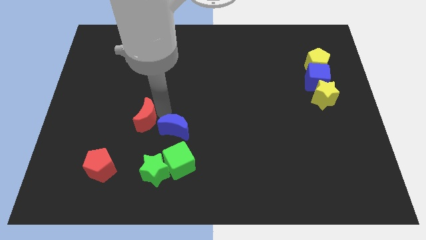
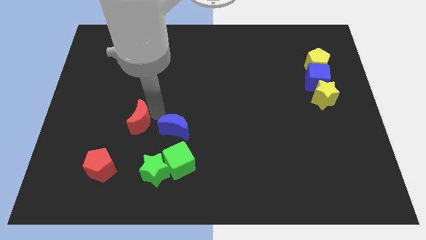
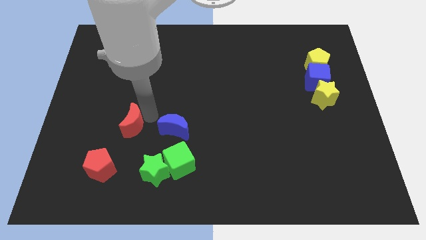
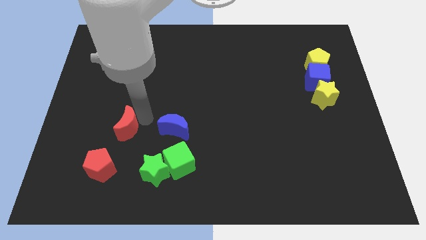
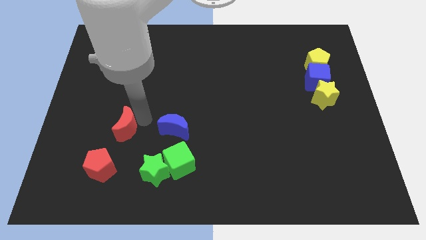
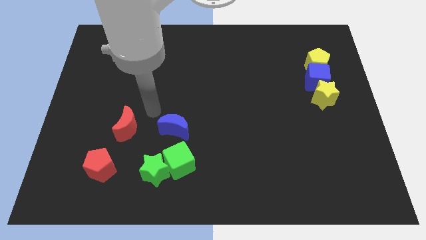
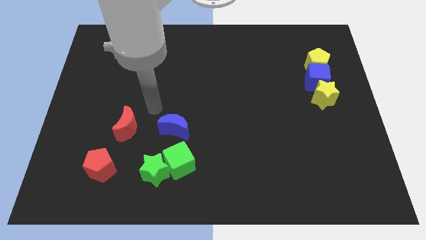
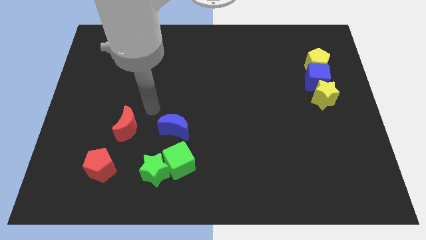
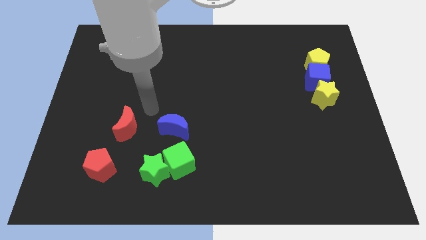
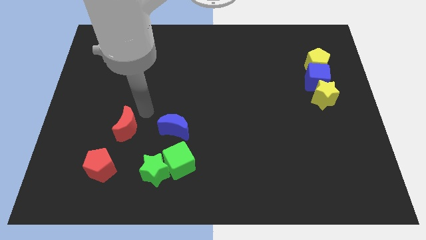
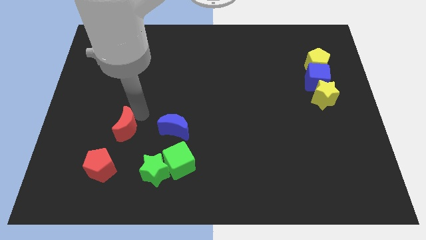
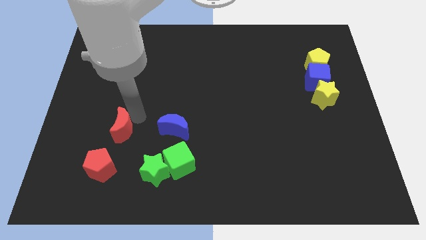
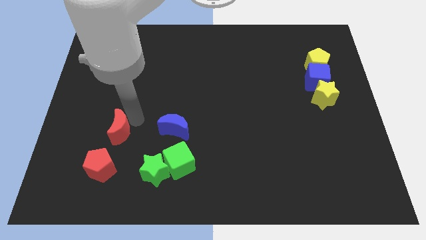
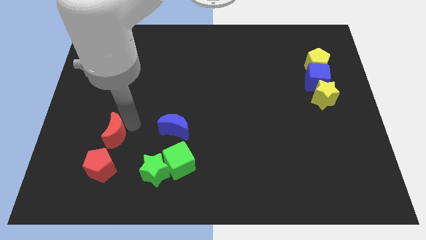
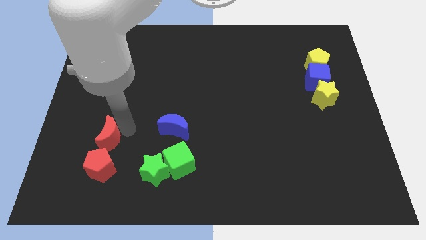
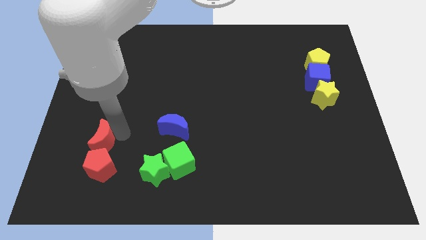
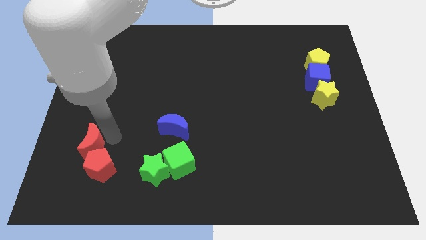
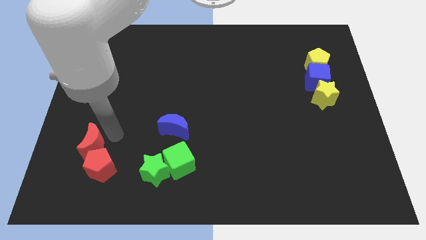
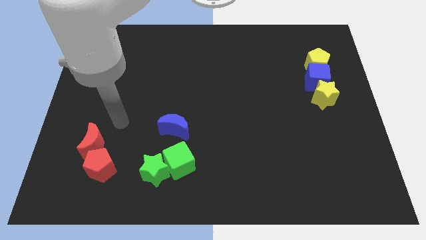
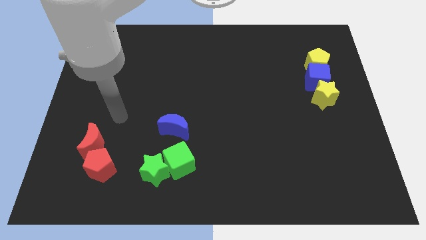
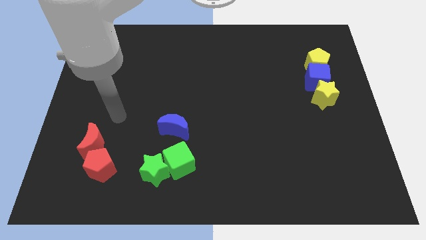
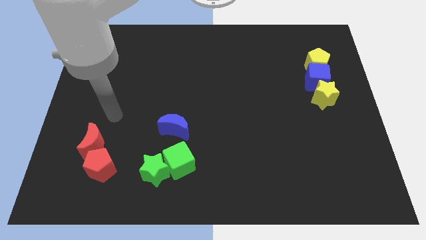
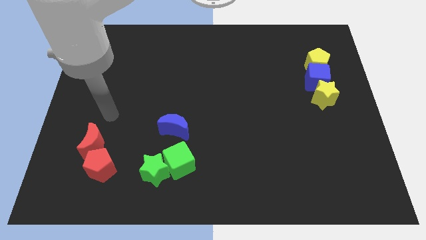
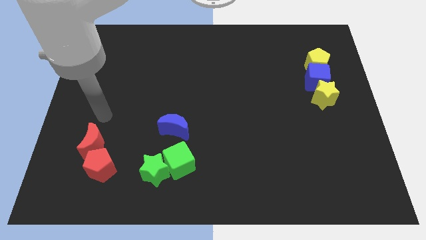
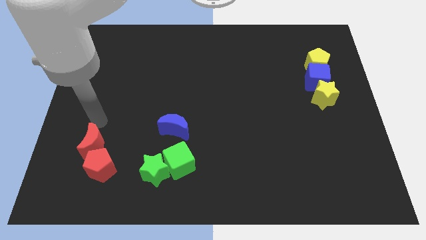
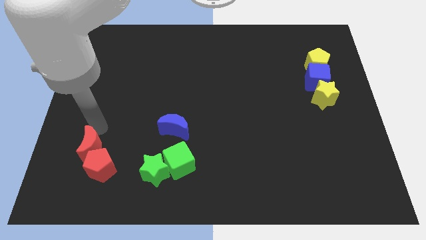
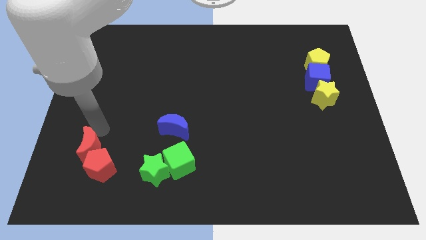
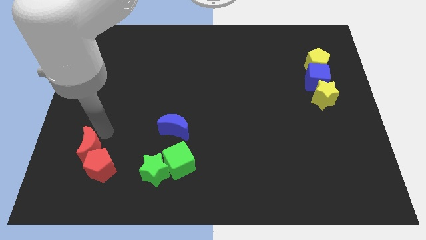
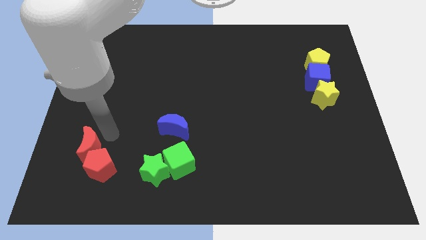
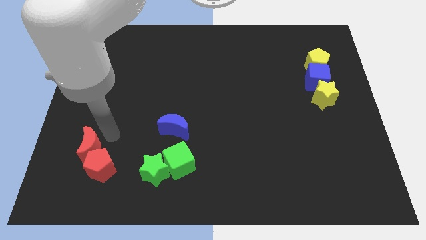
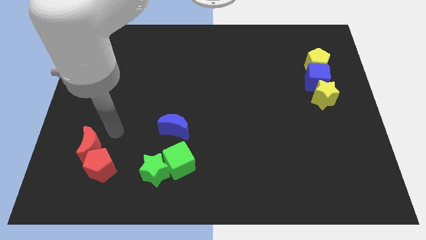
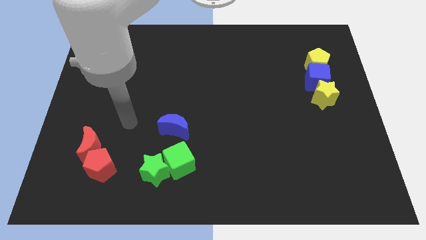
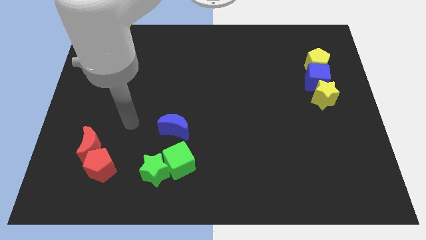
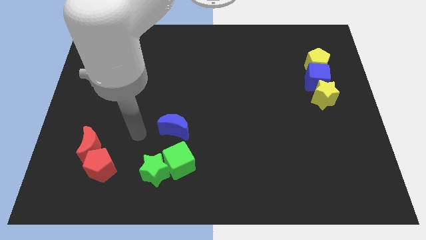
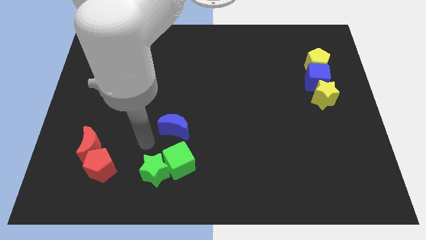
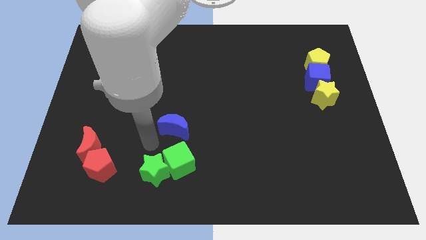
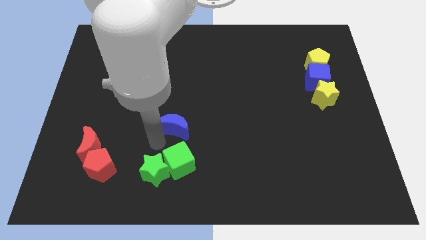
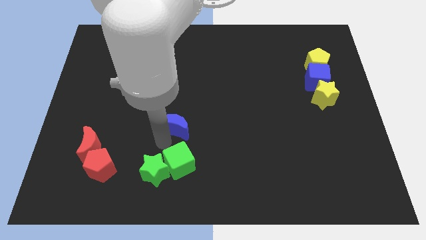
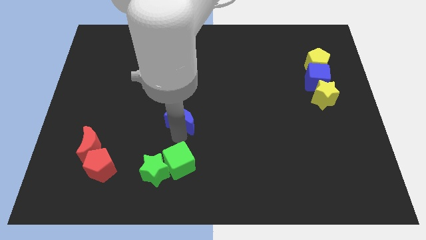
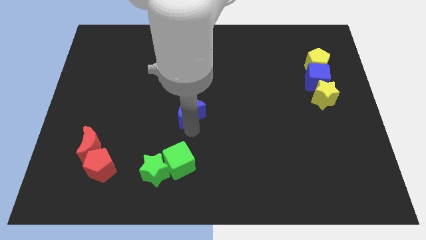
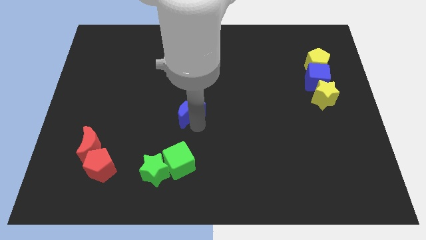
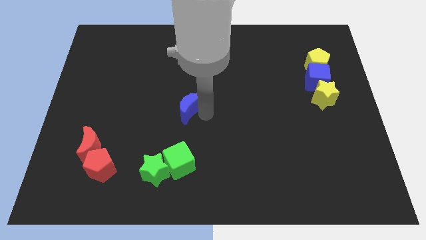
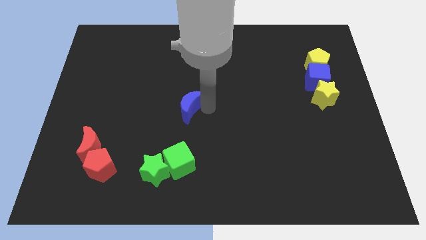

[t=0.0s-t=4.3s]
place the blue moon above the green cube

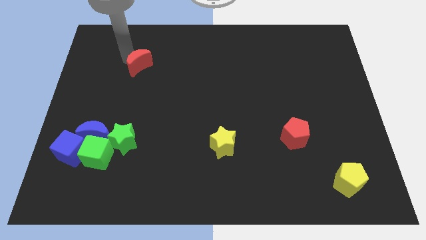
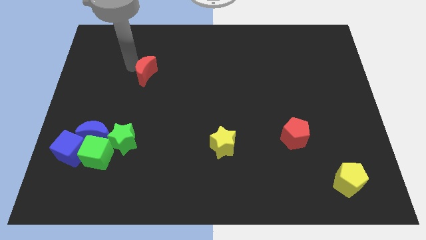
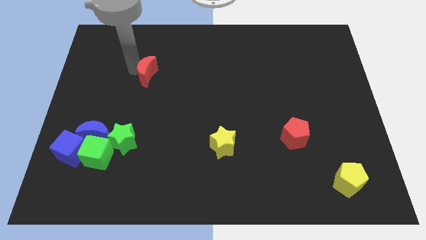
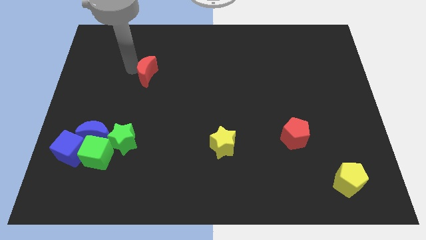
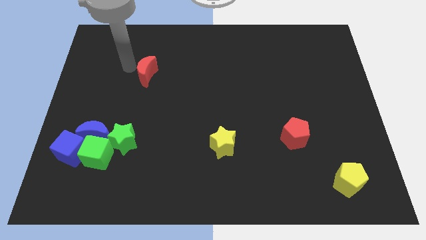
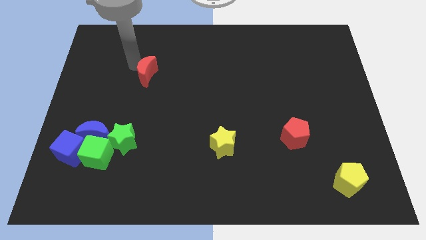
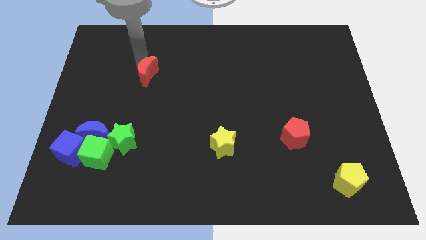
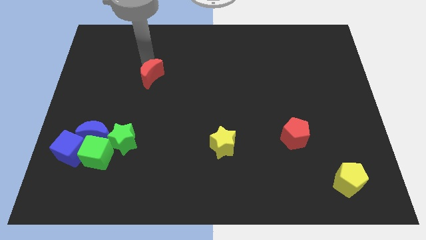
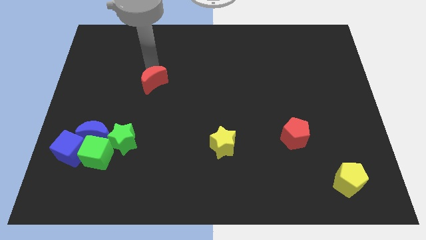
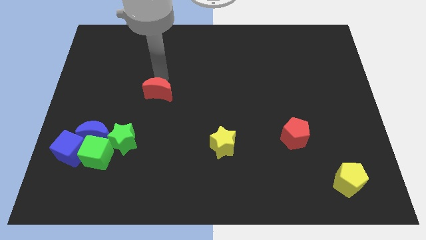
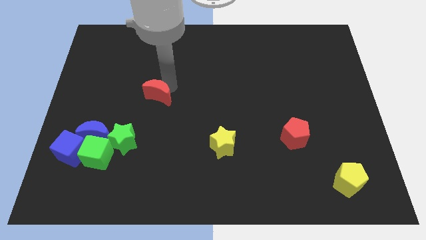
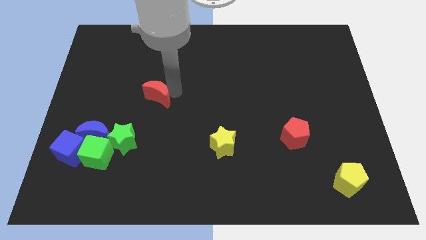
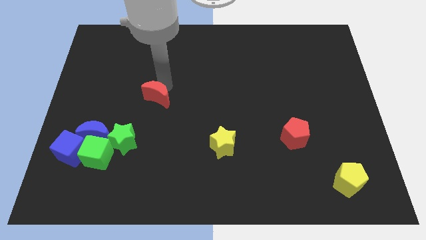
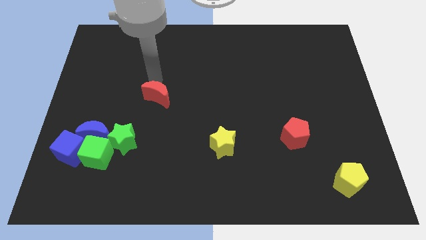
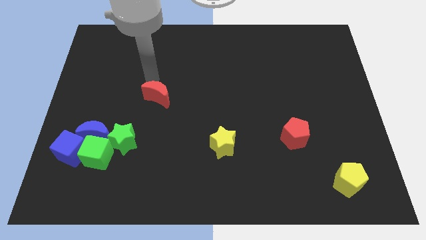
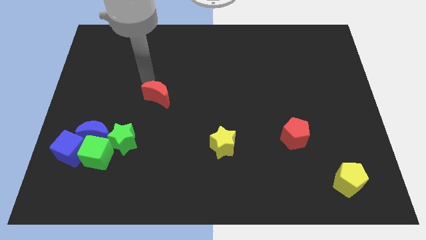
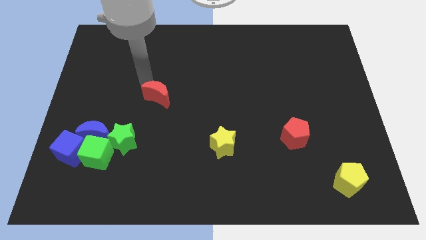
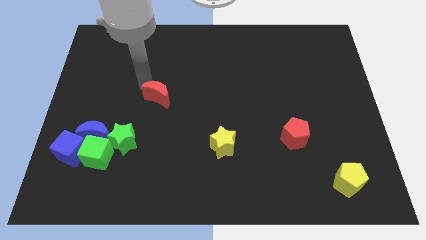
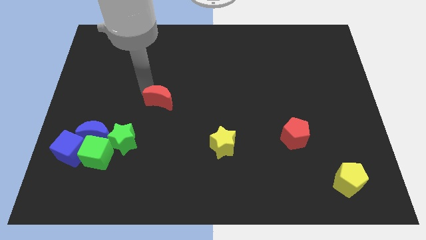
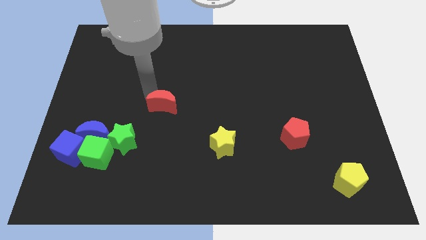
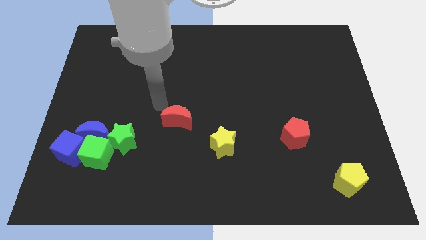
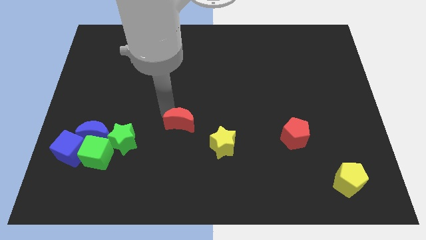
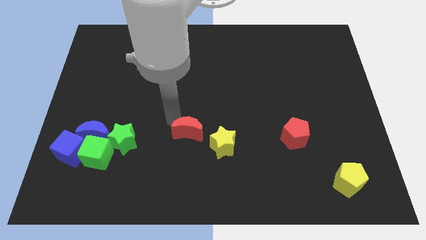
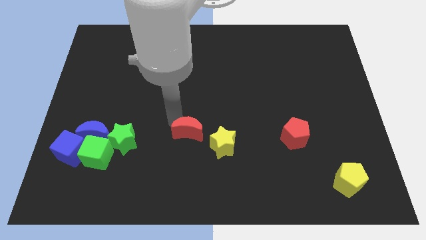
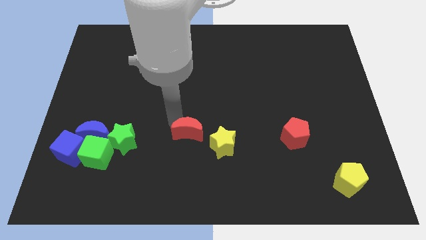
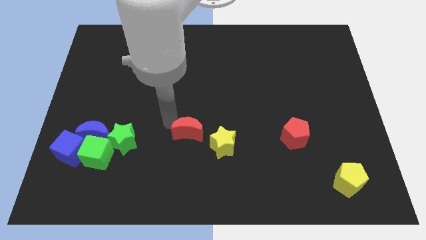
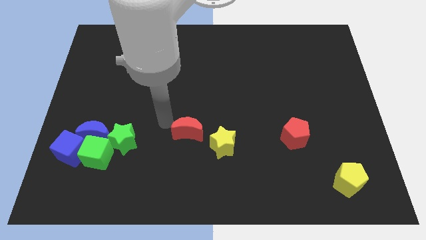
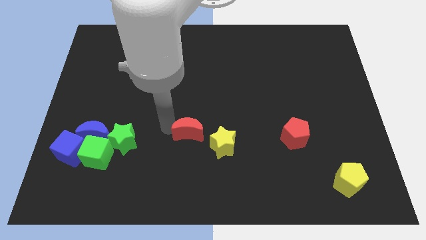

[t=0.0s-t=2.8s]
move the red moon to the left of yellow star

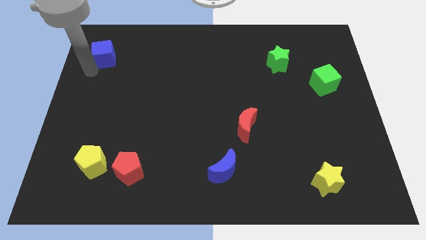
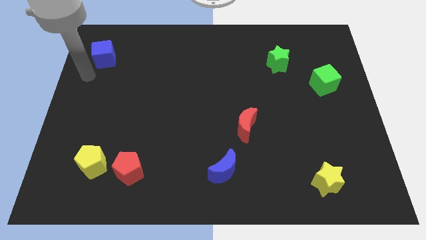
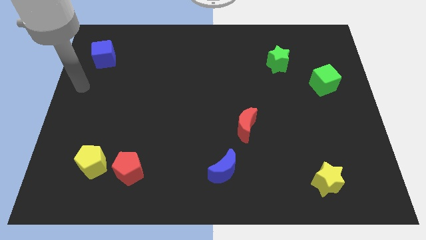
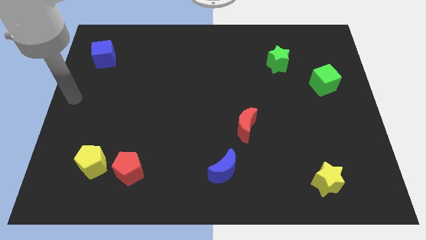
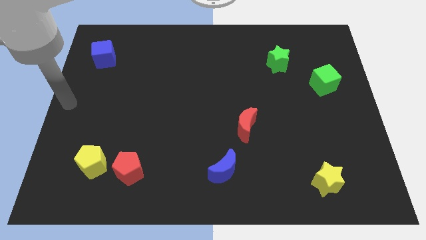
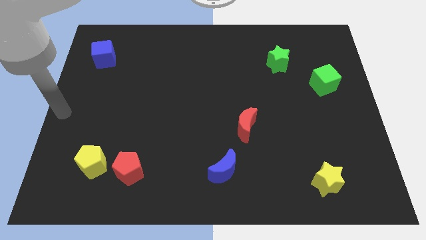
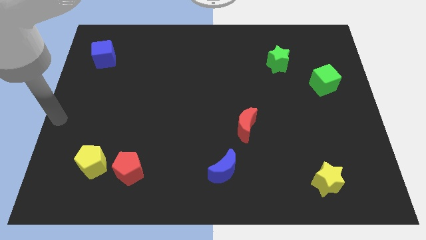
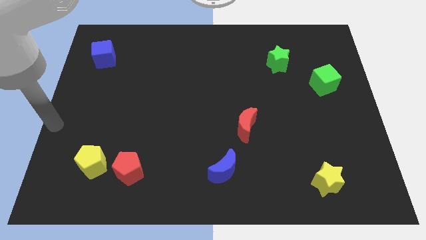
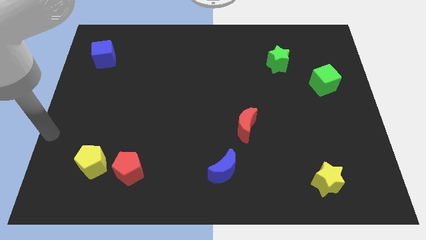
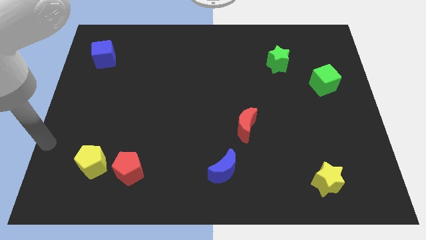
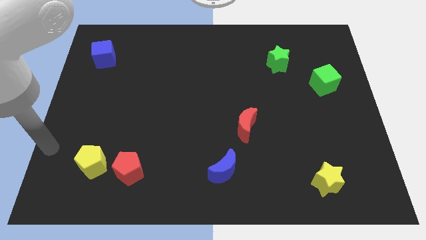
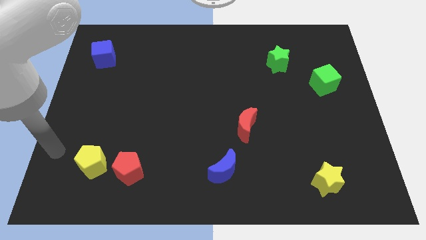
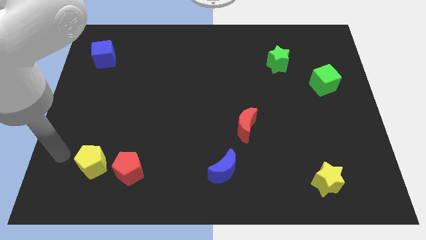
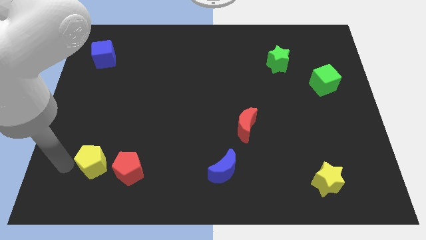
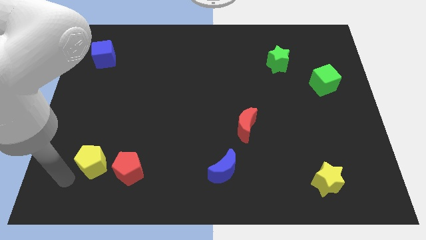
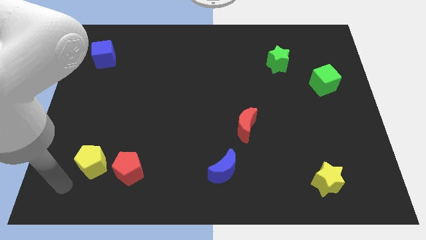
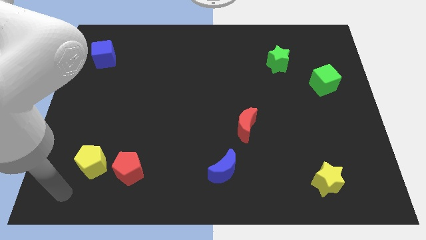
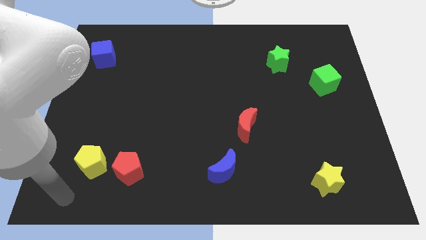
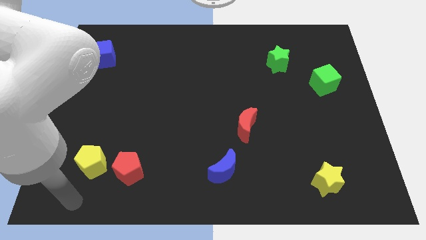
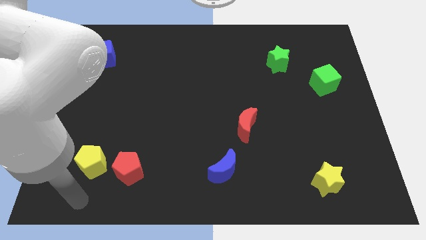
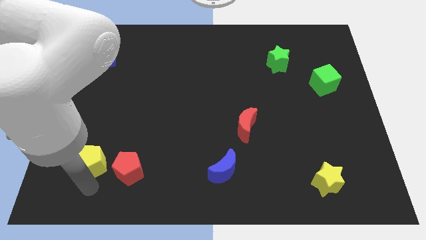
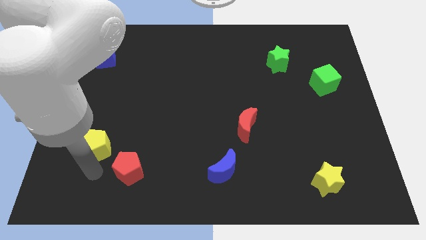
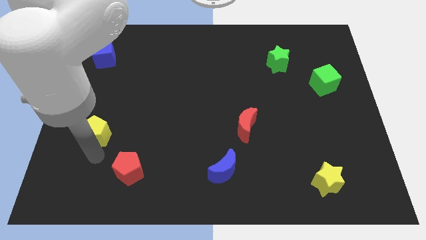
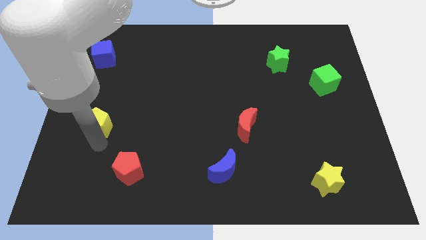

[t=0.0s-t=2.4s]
push the yellow pentagon towards the top side of the board
